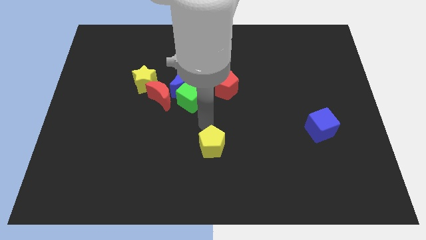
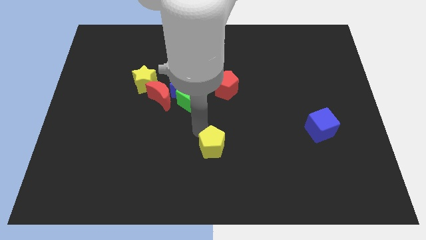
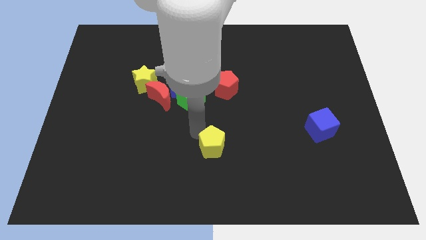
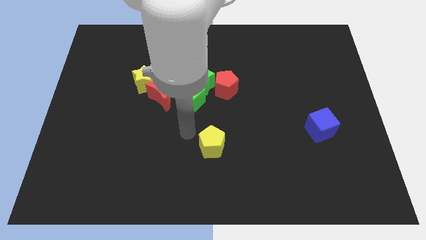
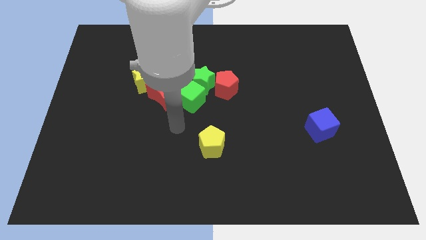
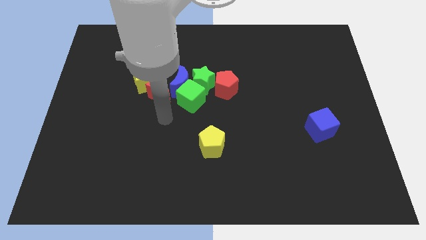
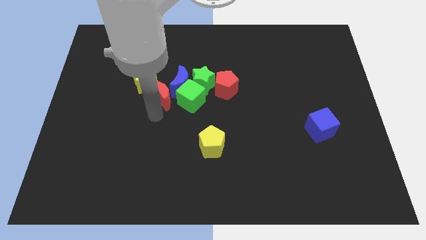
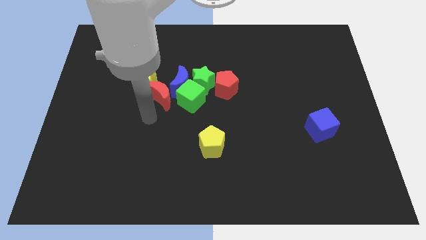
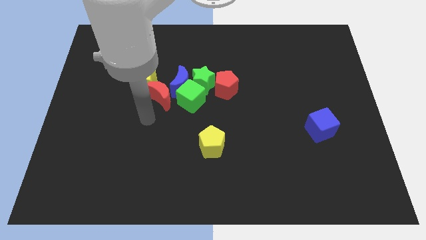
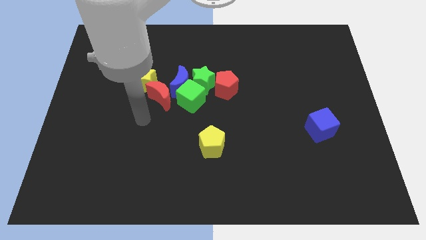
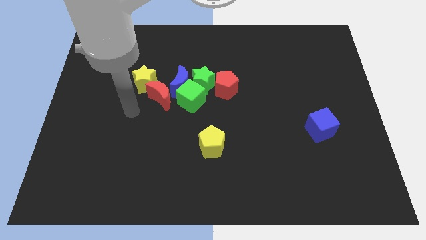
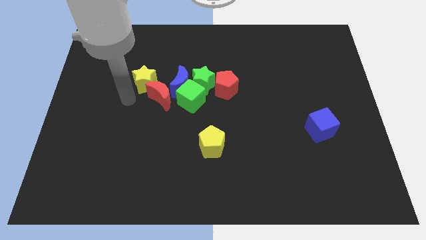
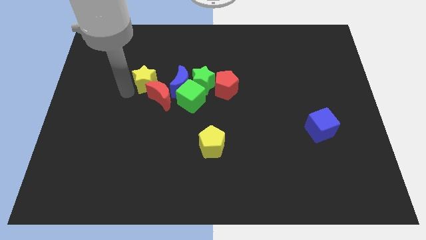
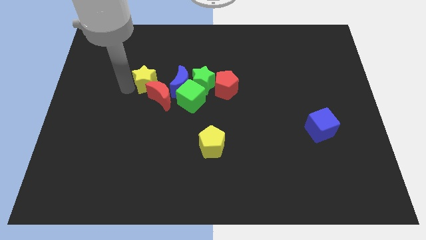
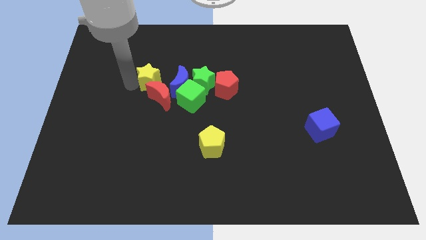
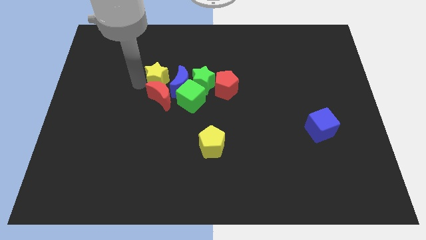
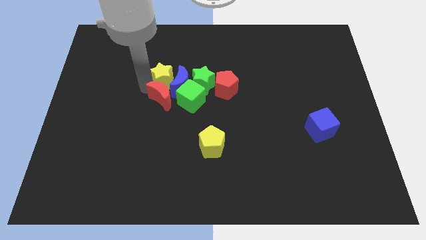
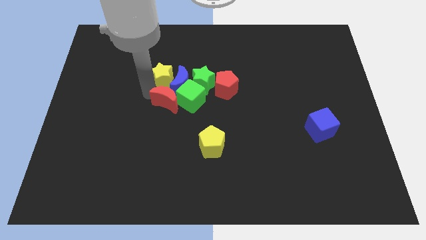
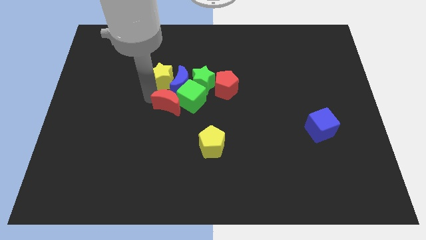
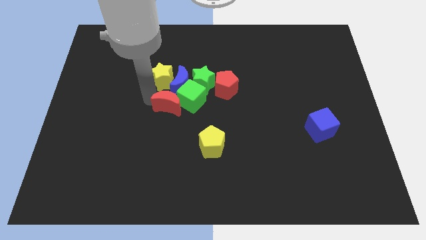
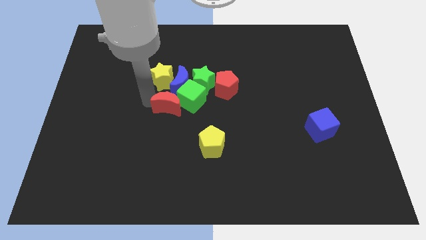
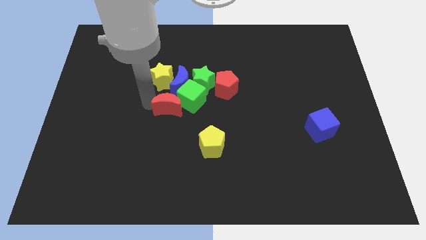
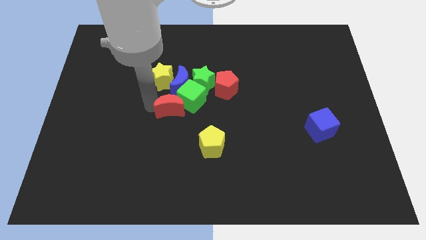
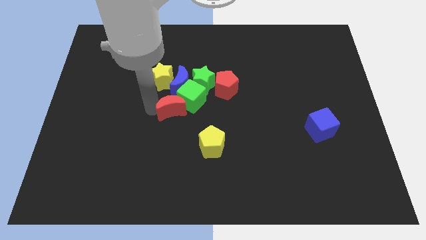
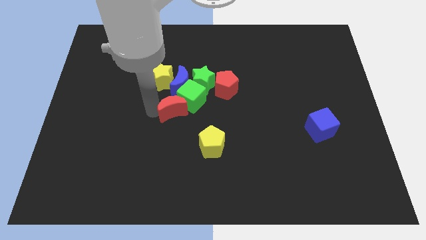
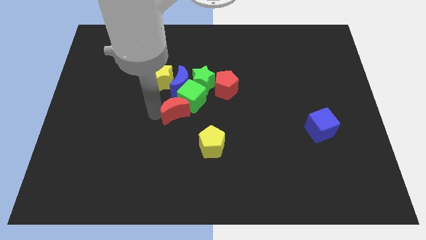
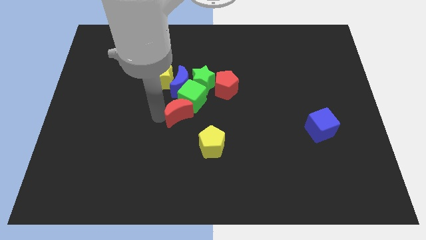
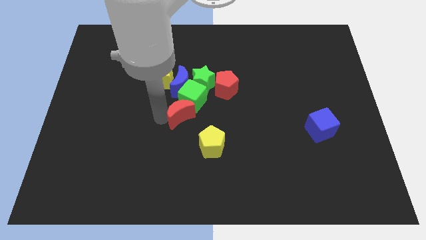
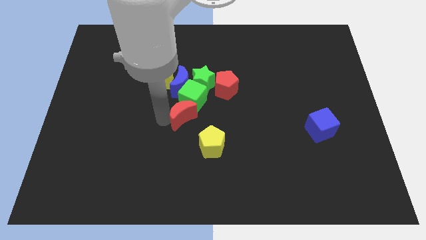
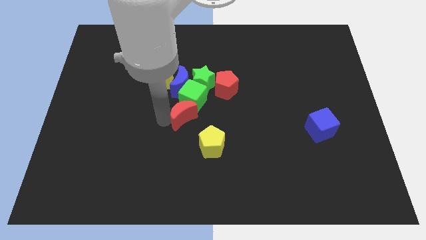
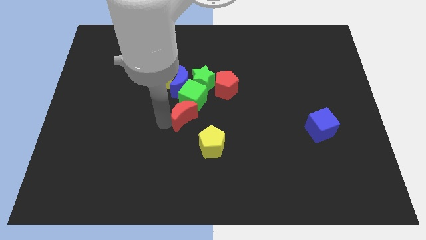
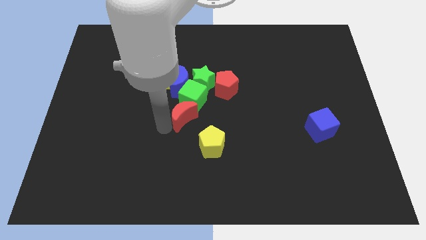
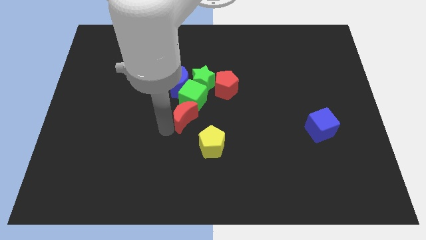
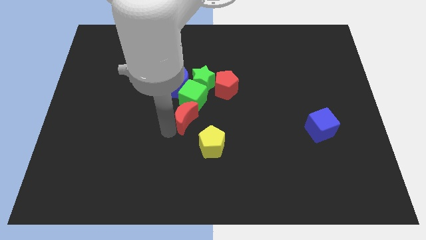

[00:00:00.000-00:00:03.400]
move red moon slightly to the center

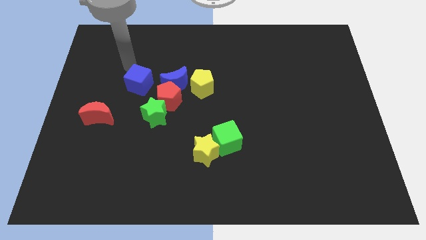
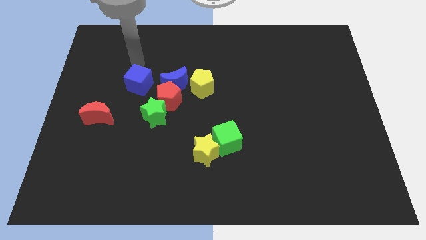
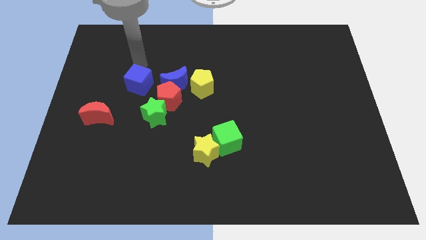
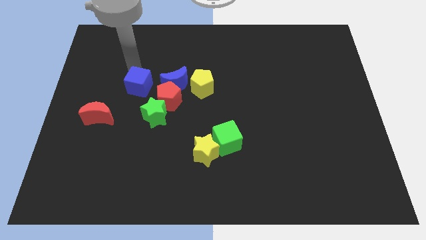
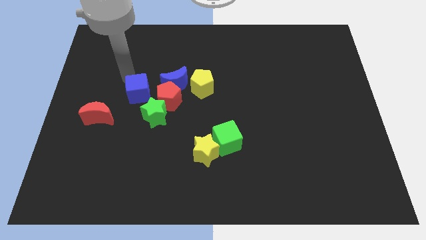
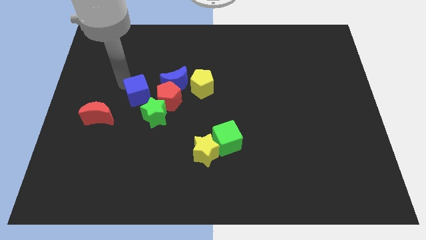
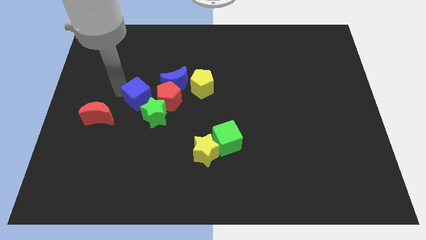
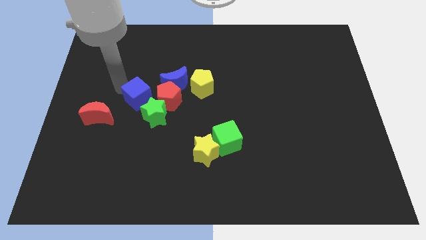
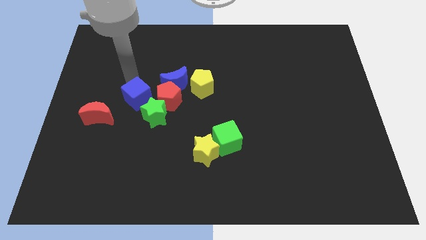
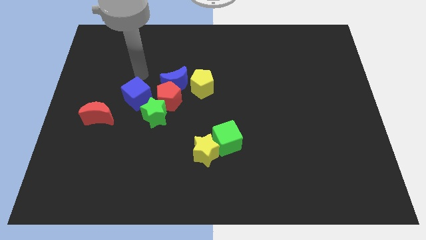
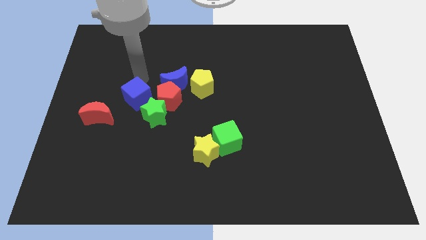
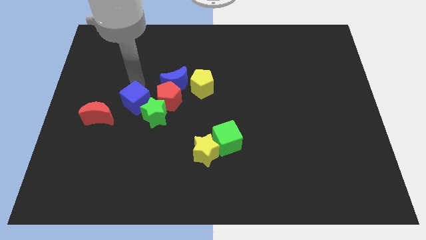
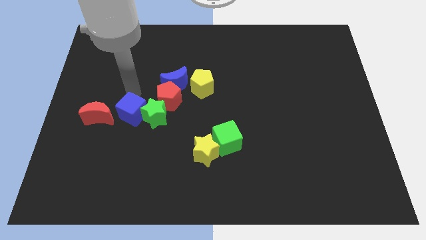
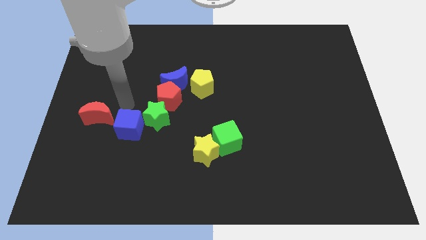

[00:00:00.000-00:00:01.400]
place the blue cube in between the red moon and green star

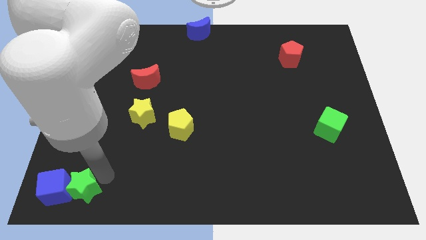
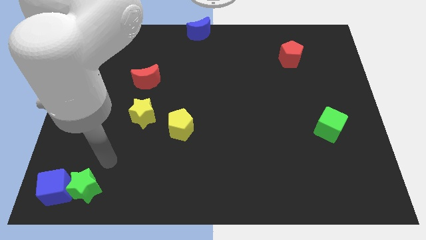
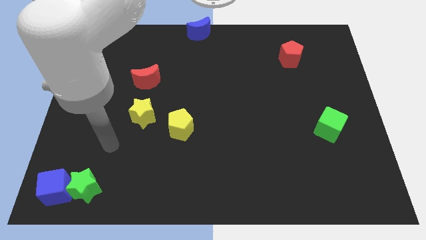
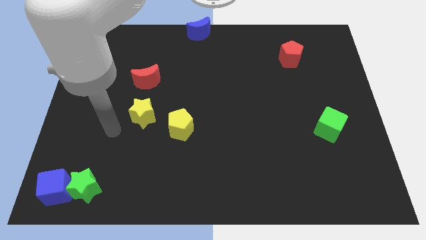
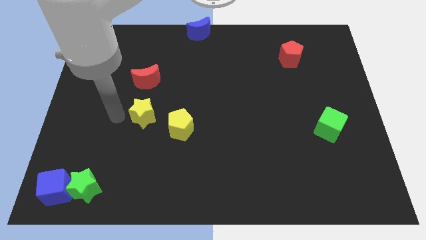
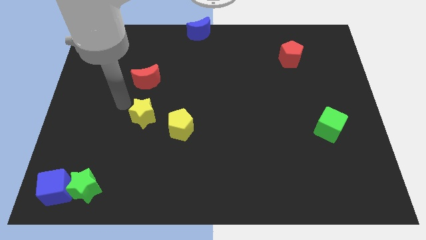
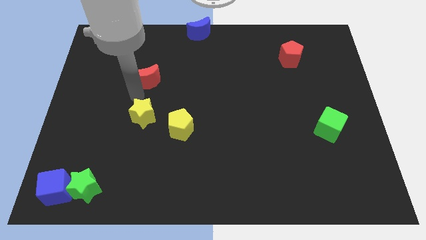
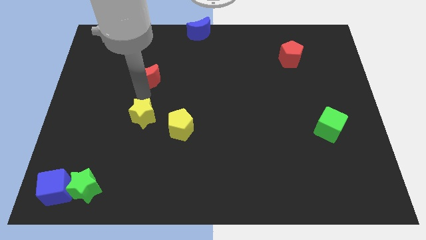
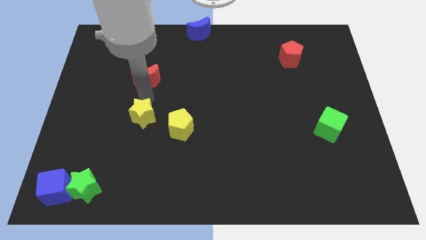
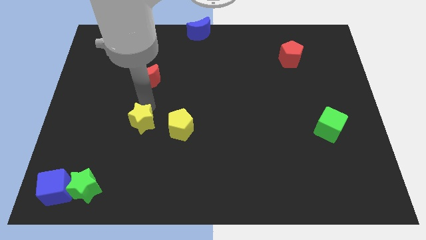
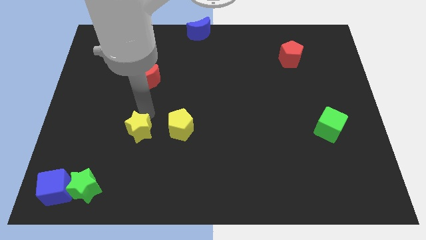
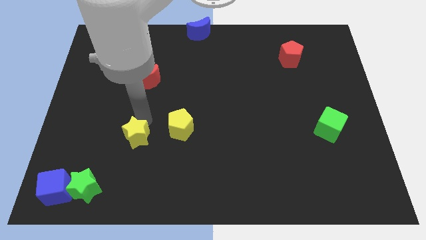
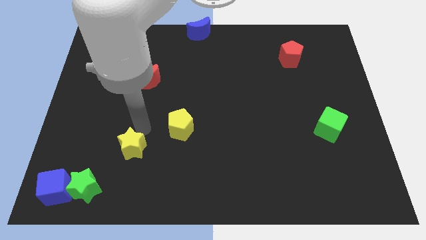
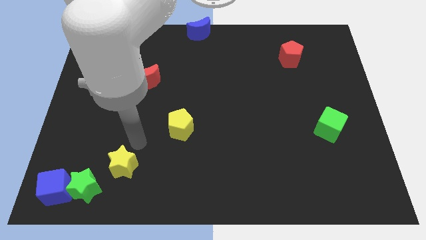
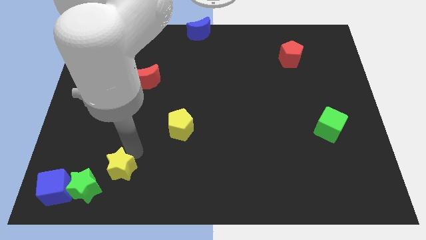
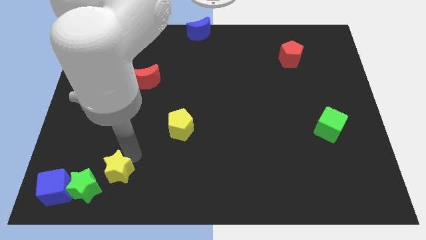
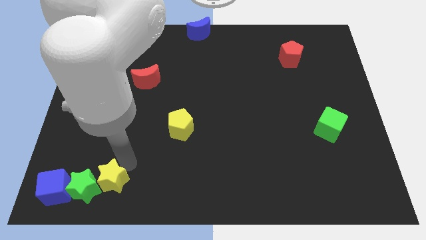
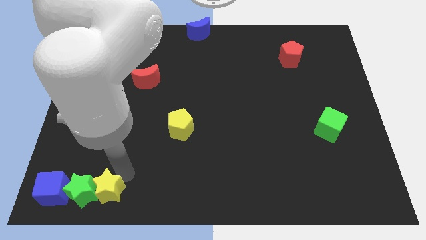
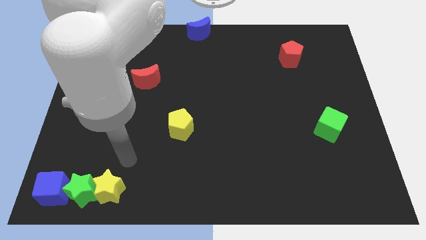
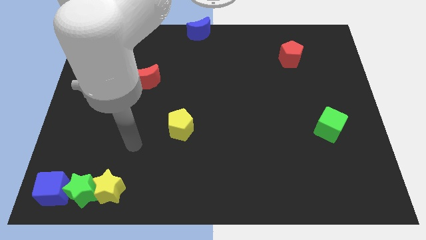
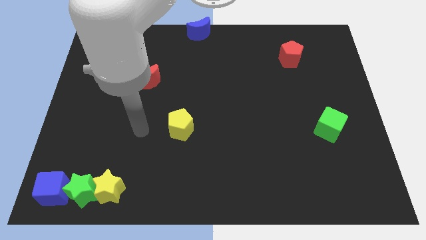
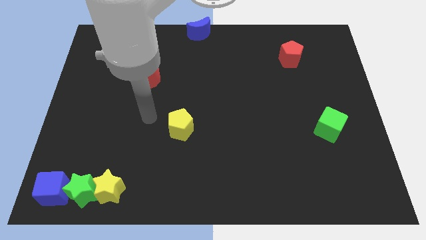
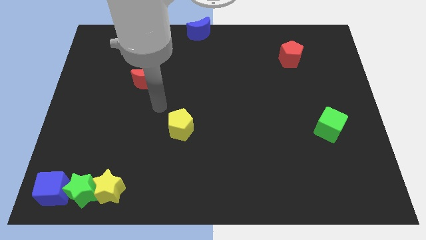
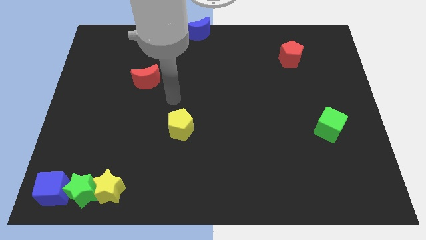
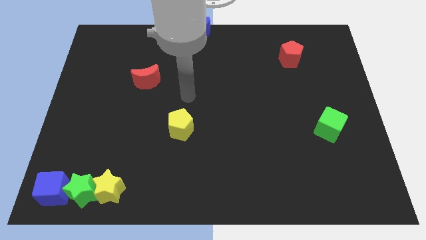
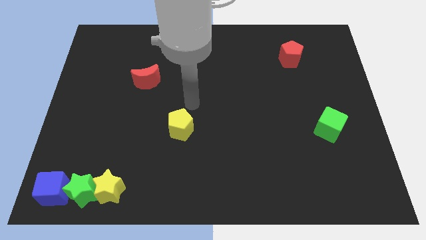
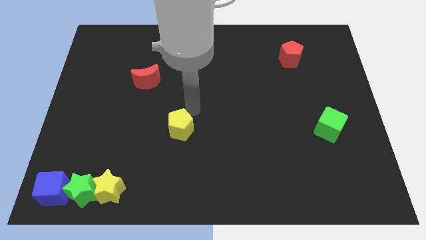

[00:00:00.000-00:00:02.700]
push the yellow pentagon to the right of the yellow star

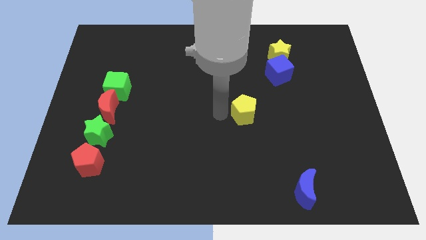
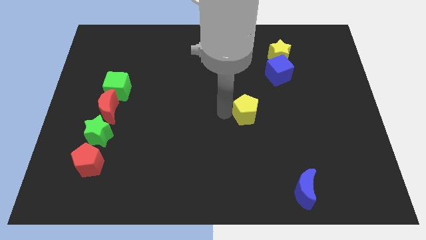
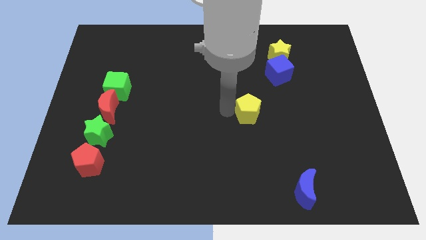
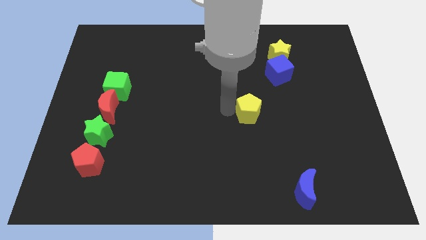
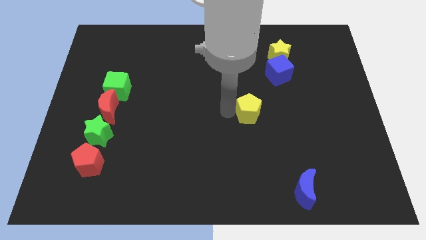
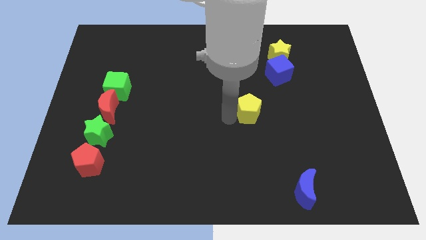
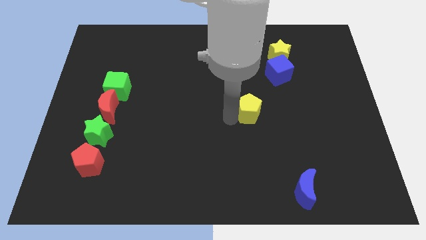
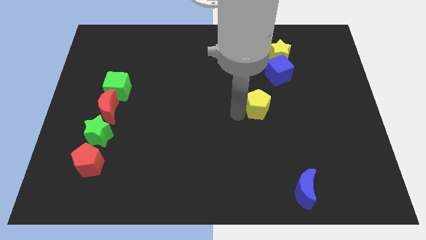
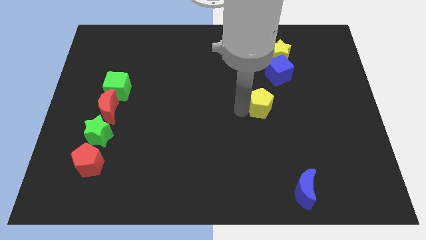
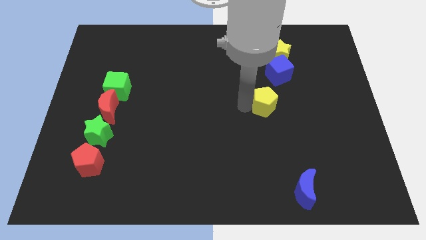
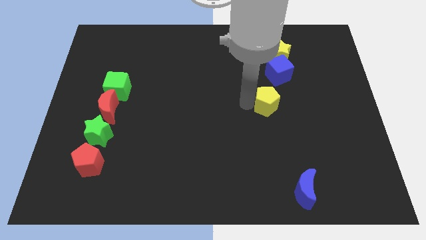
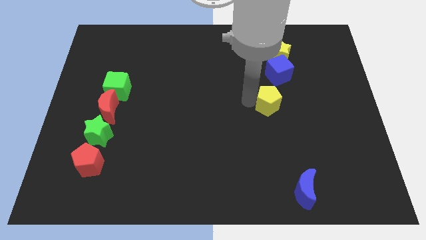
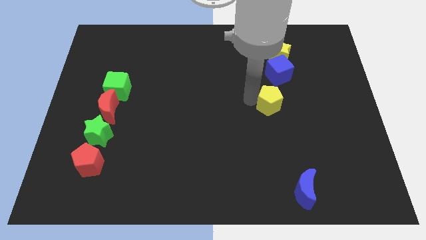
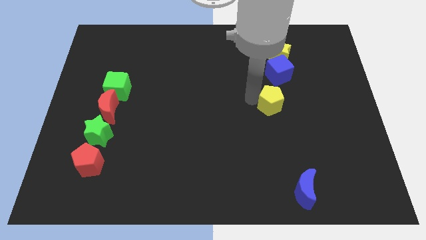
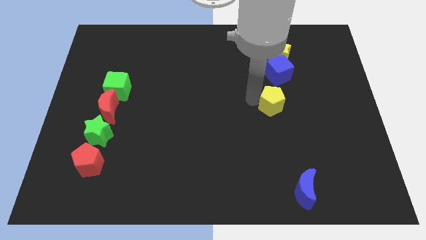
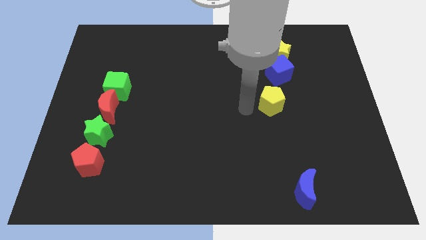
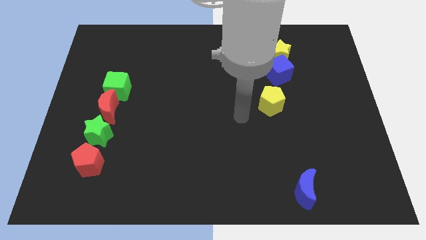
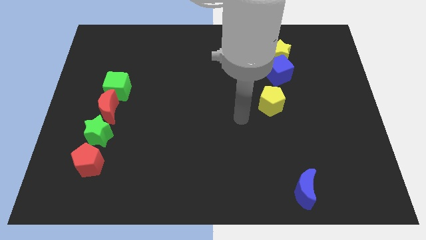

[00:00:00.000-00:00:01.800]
move the yellow pentagon to the bottom left of the blue cube
